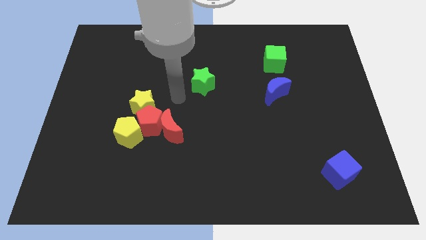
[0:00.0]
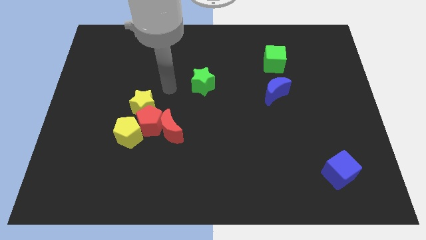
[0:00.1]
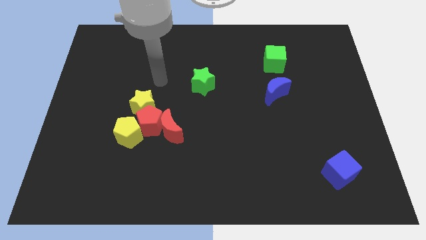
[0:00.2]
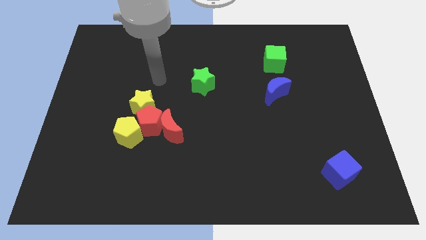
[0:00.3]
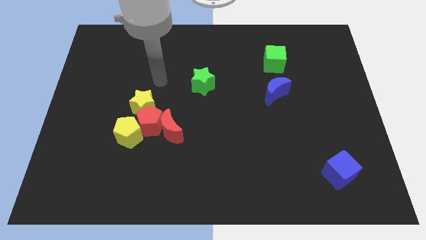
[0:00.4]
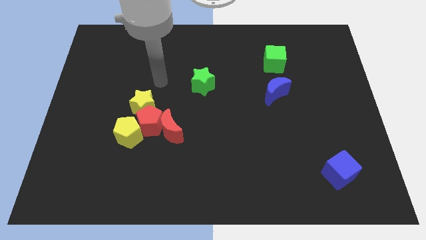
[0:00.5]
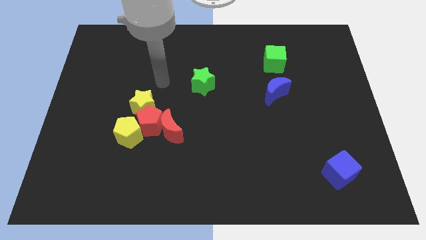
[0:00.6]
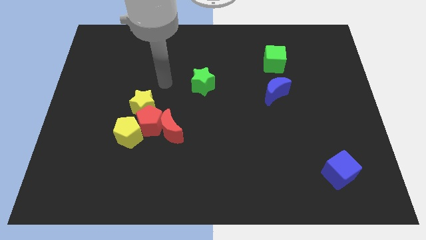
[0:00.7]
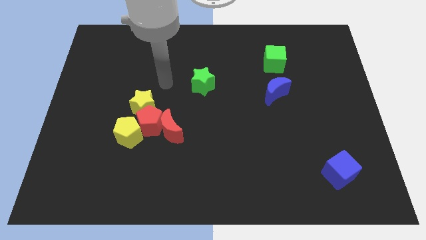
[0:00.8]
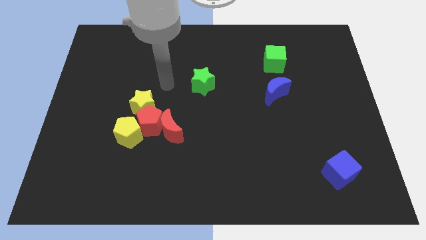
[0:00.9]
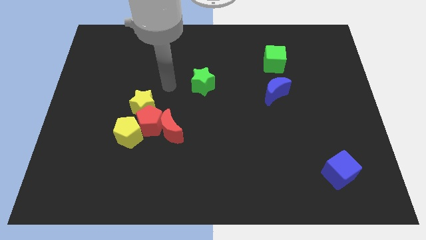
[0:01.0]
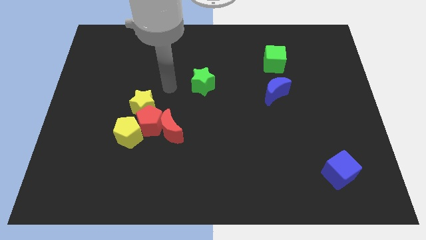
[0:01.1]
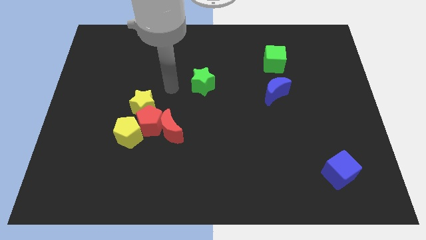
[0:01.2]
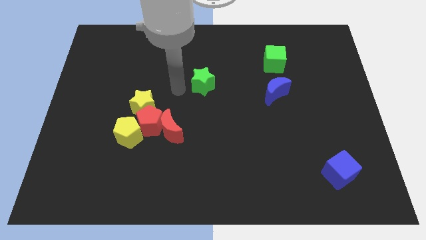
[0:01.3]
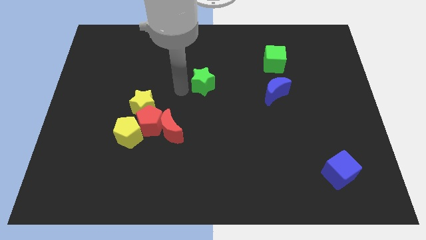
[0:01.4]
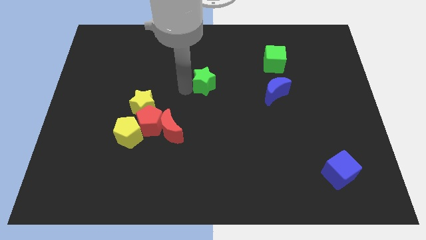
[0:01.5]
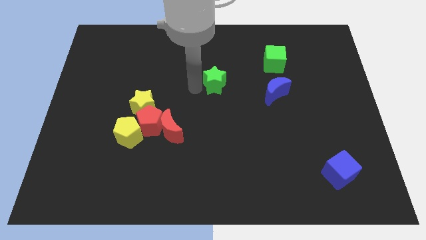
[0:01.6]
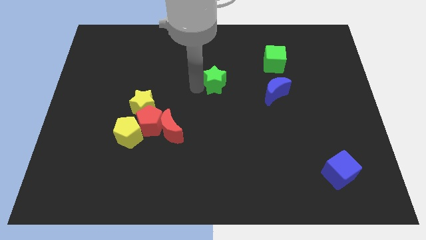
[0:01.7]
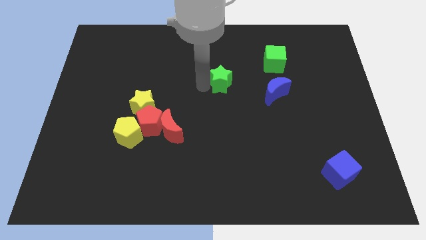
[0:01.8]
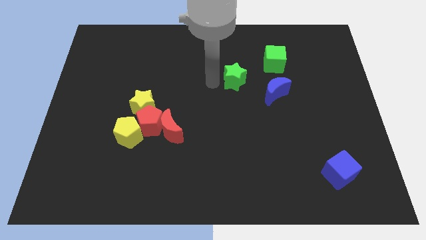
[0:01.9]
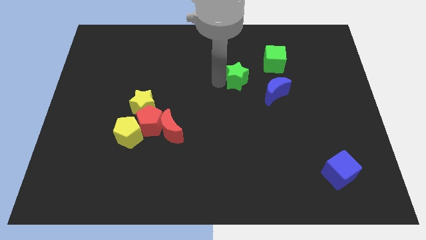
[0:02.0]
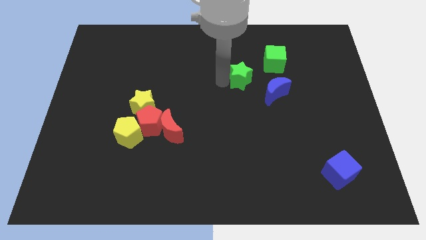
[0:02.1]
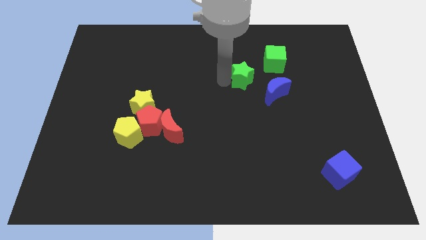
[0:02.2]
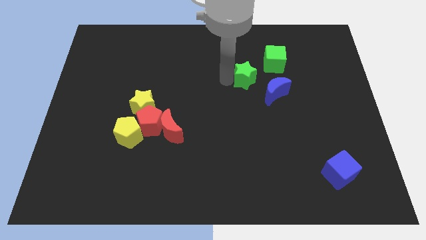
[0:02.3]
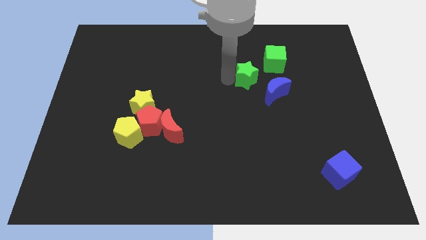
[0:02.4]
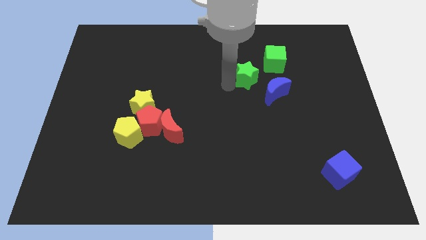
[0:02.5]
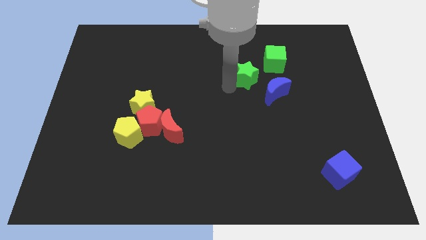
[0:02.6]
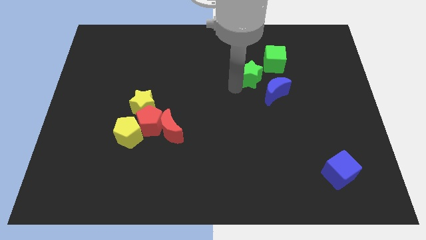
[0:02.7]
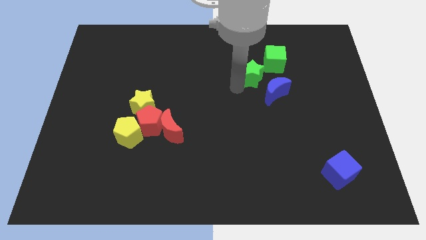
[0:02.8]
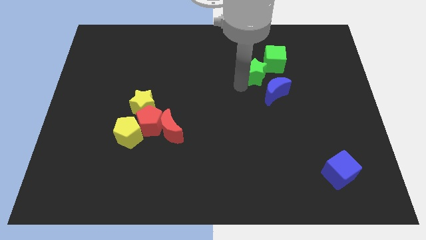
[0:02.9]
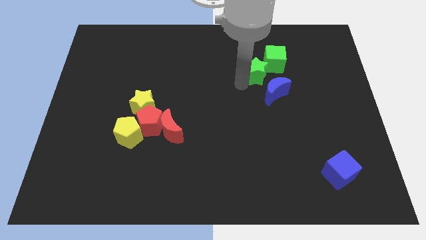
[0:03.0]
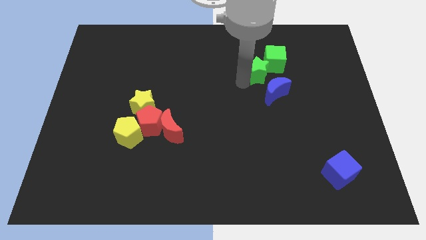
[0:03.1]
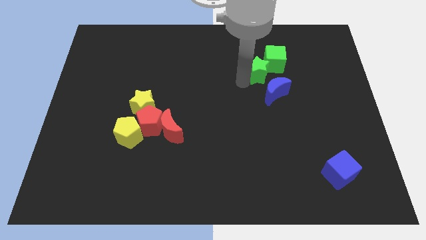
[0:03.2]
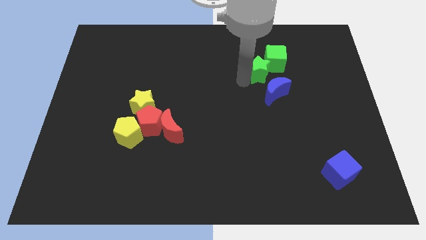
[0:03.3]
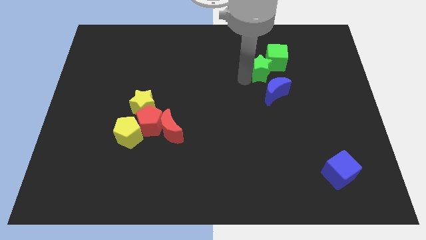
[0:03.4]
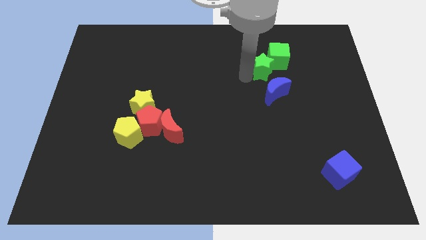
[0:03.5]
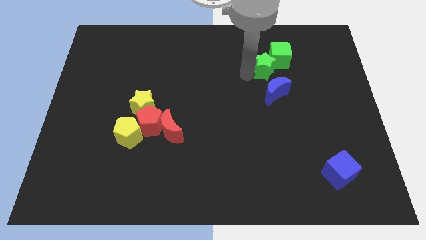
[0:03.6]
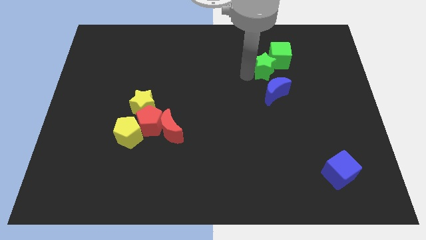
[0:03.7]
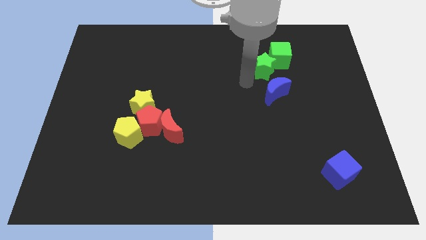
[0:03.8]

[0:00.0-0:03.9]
place the green star below the green cube

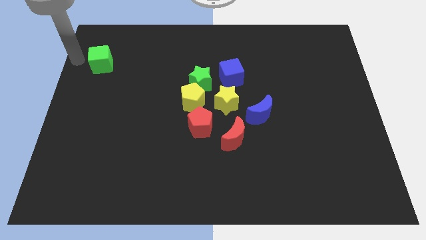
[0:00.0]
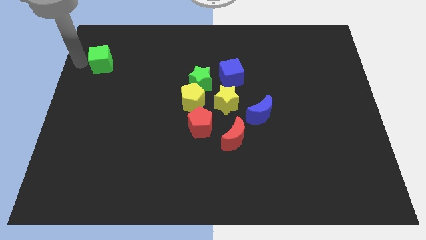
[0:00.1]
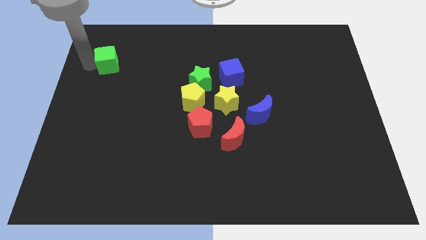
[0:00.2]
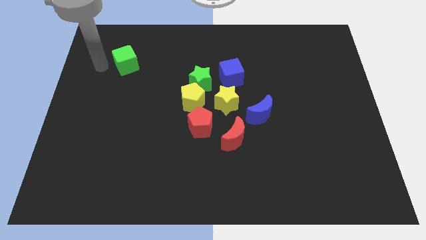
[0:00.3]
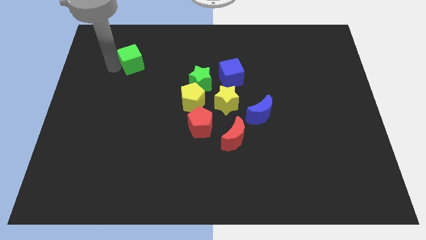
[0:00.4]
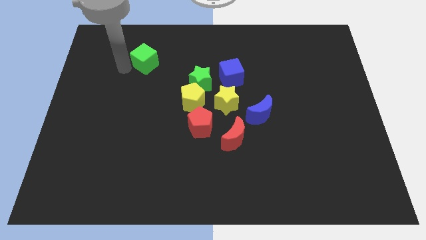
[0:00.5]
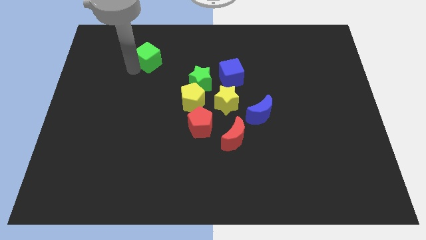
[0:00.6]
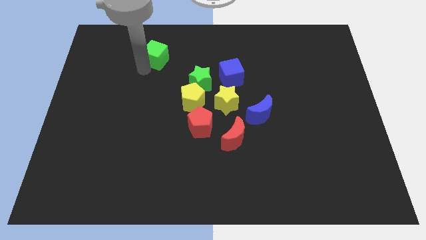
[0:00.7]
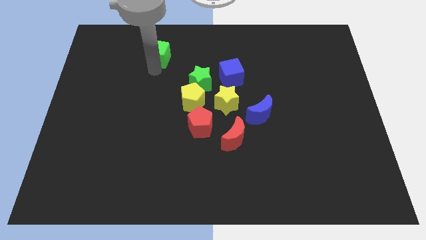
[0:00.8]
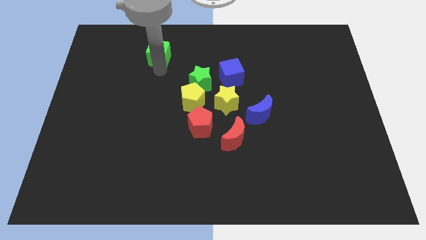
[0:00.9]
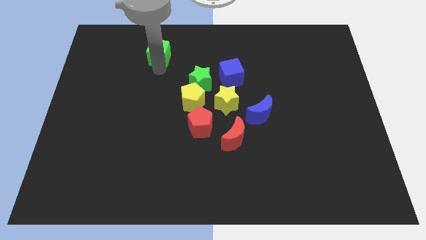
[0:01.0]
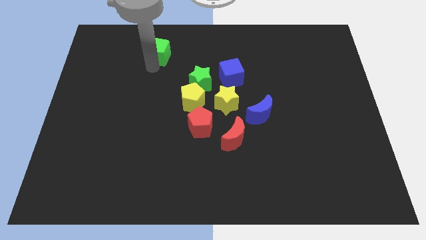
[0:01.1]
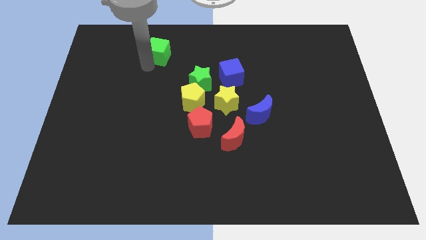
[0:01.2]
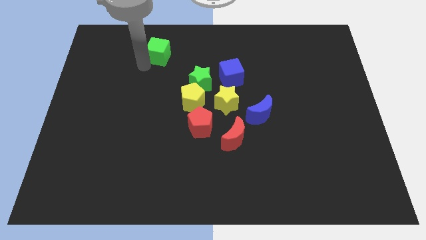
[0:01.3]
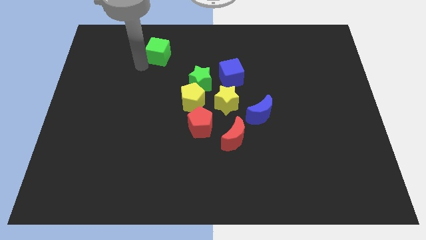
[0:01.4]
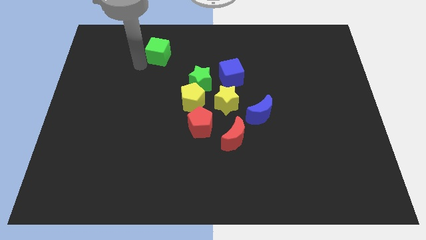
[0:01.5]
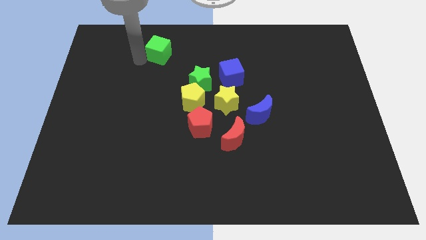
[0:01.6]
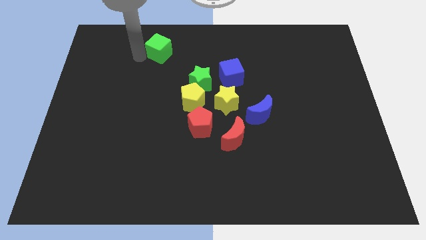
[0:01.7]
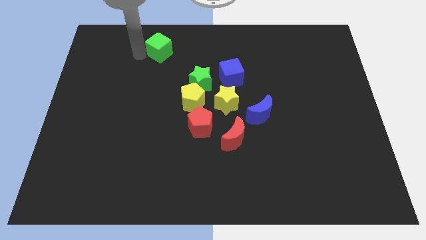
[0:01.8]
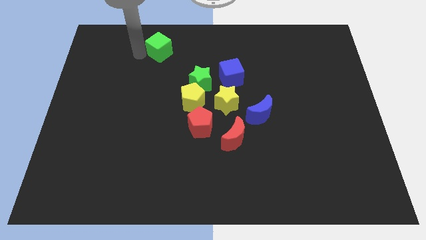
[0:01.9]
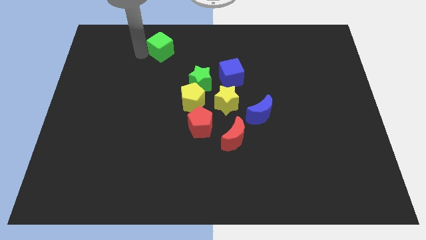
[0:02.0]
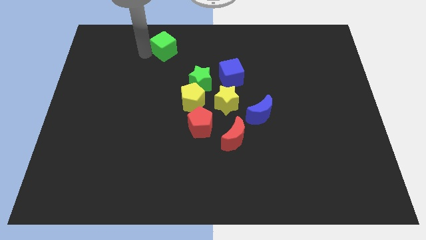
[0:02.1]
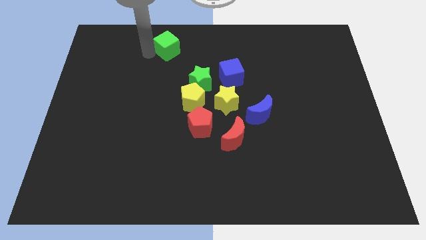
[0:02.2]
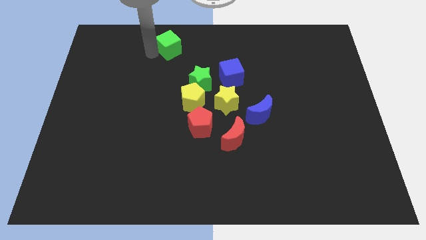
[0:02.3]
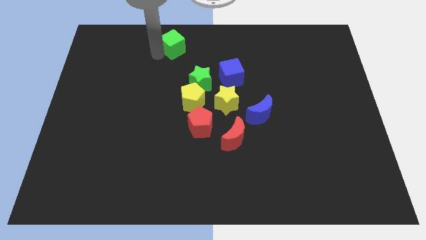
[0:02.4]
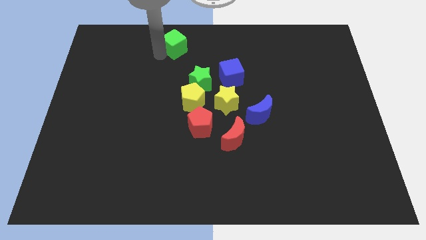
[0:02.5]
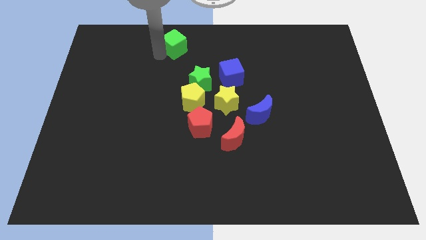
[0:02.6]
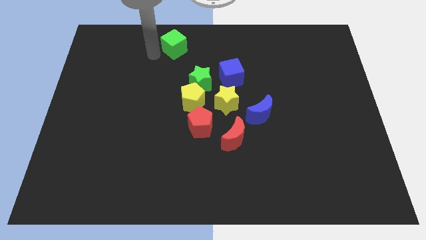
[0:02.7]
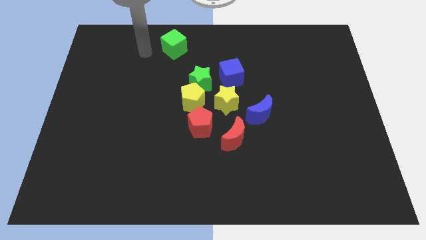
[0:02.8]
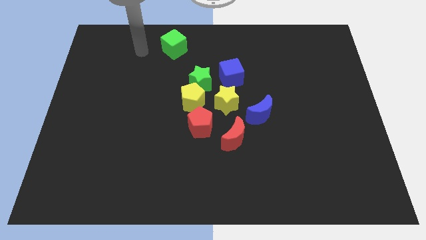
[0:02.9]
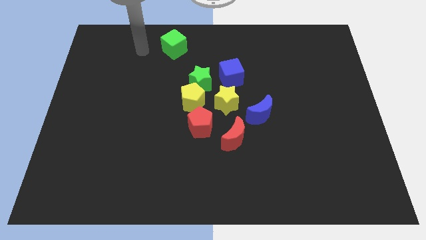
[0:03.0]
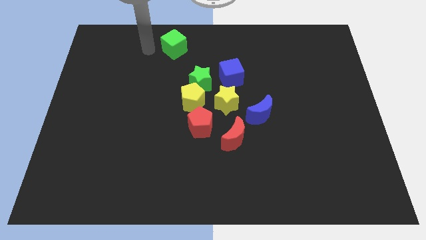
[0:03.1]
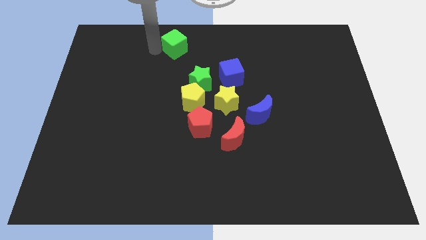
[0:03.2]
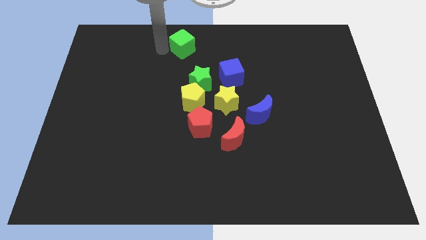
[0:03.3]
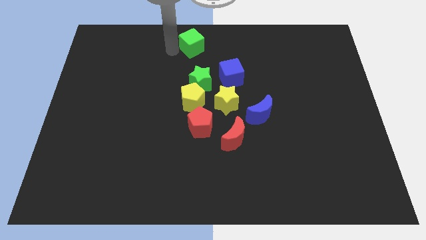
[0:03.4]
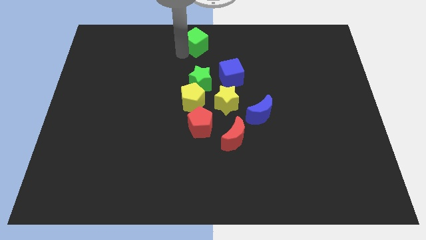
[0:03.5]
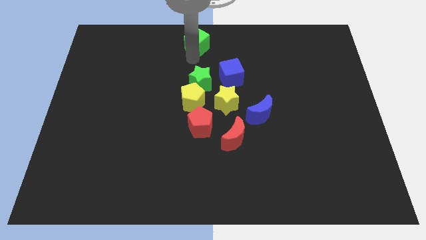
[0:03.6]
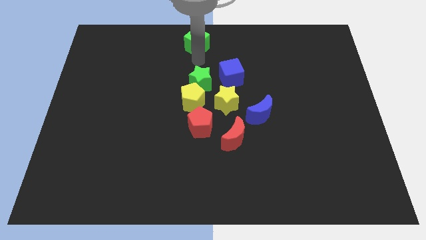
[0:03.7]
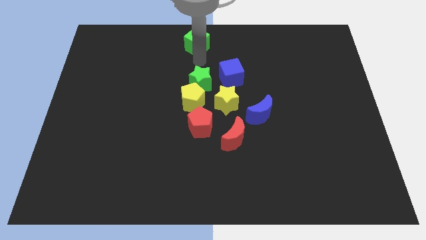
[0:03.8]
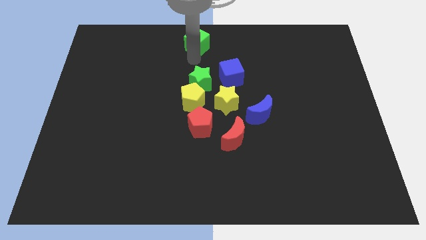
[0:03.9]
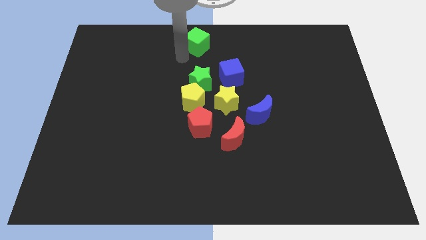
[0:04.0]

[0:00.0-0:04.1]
push the green cube to the top center

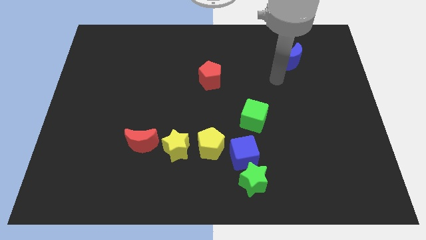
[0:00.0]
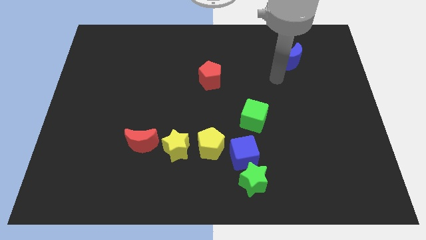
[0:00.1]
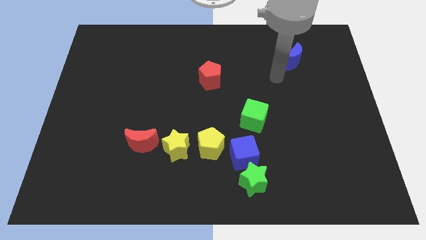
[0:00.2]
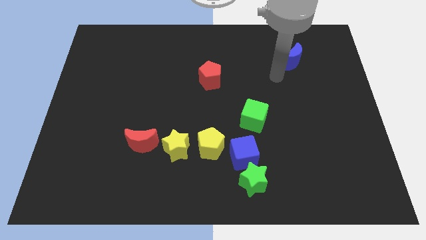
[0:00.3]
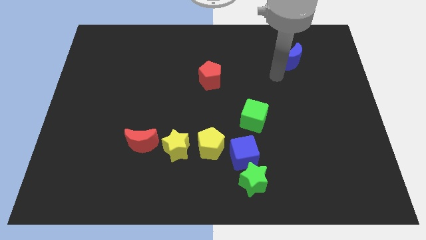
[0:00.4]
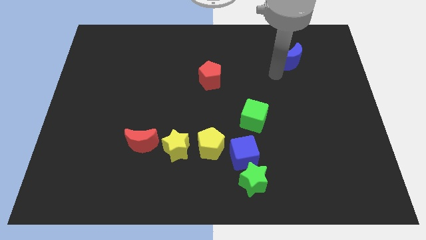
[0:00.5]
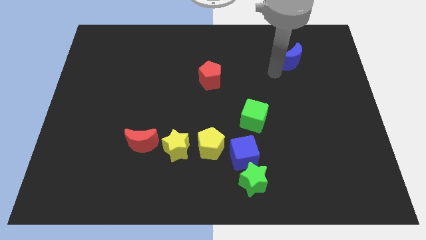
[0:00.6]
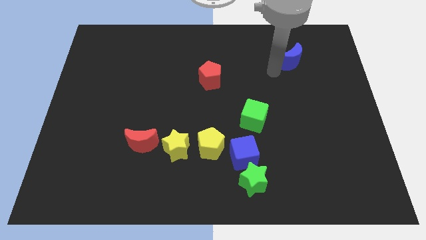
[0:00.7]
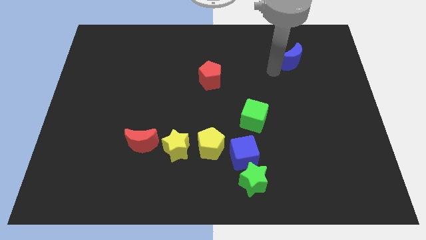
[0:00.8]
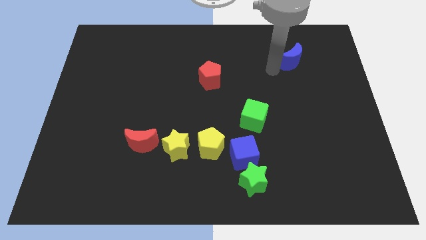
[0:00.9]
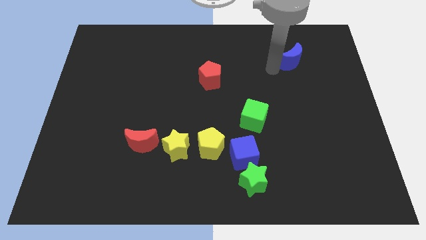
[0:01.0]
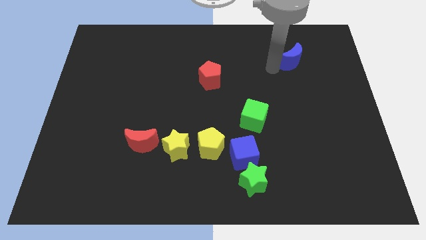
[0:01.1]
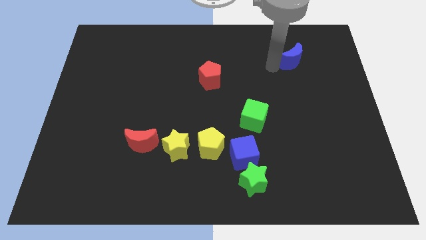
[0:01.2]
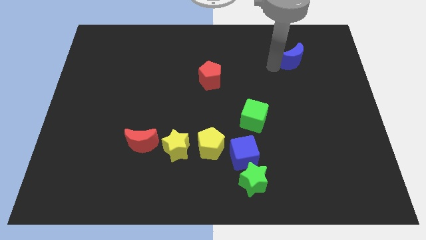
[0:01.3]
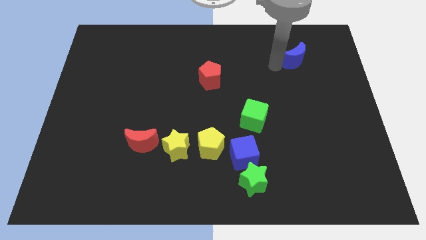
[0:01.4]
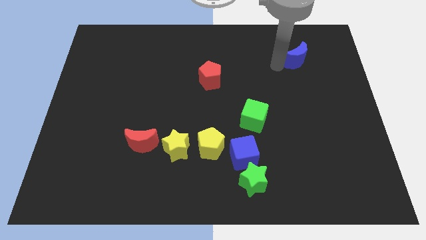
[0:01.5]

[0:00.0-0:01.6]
touch the bottom of blue crescent
